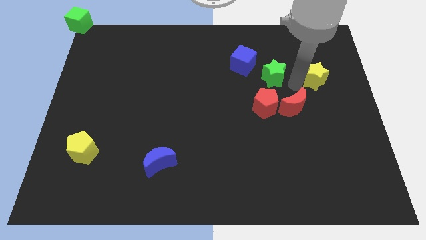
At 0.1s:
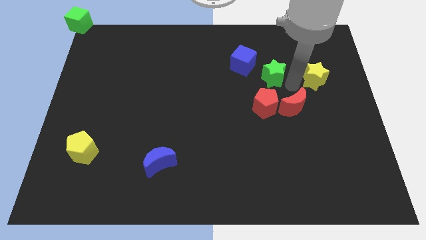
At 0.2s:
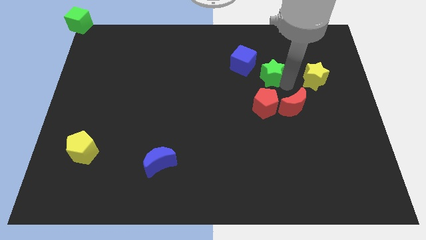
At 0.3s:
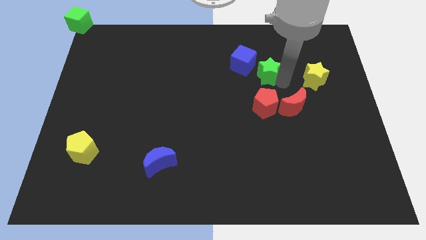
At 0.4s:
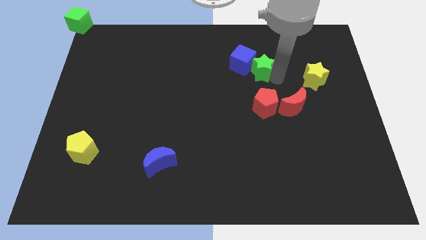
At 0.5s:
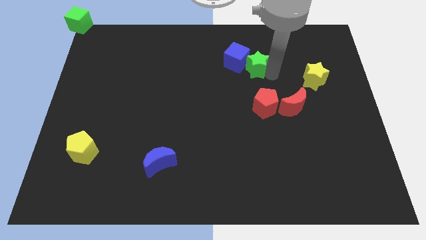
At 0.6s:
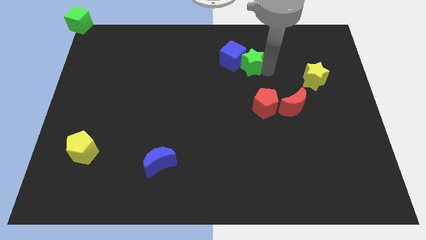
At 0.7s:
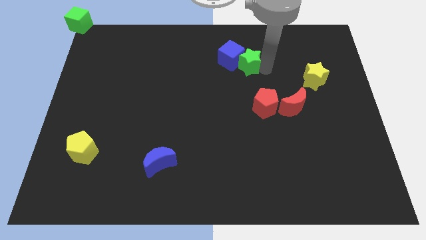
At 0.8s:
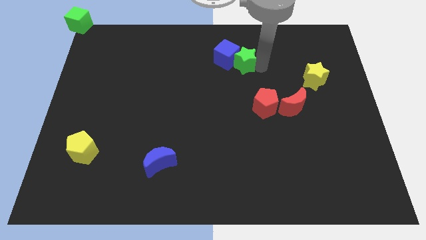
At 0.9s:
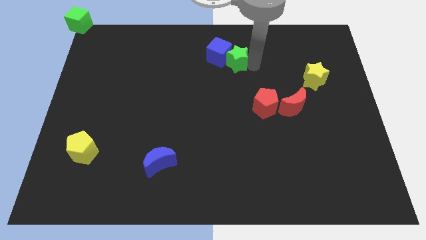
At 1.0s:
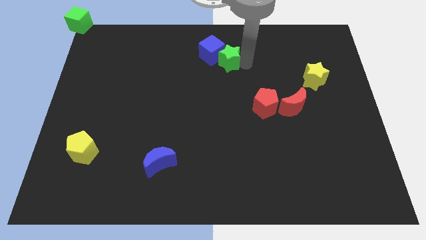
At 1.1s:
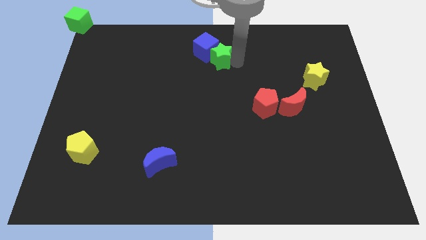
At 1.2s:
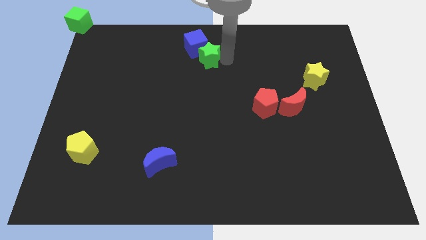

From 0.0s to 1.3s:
push the green star into the blue cube

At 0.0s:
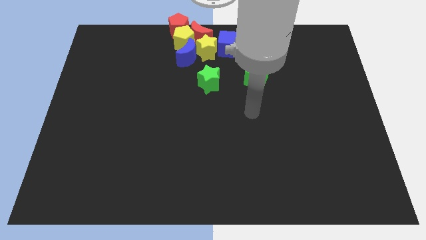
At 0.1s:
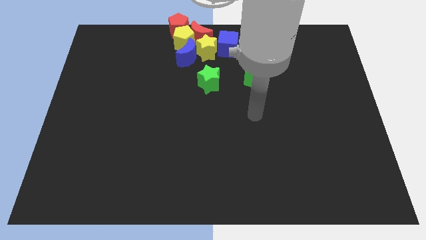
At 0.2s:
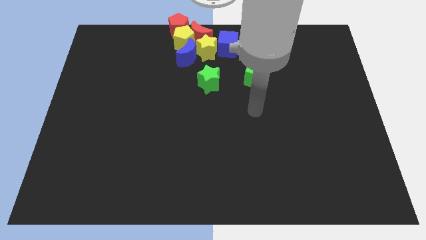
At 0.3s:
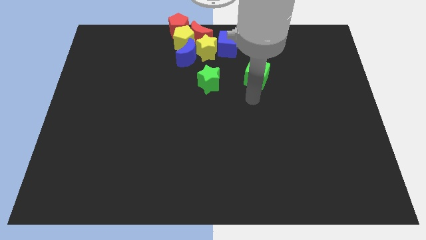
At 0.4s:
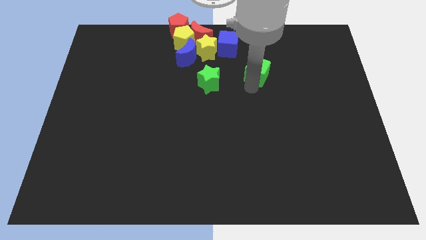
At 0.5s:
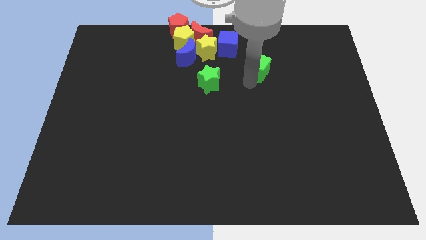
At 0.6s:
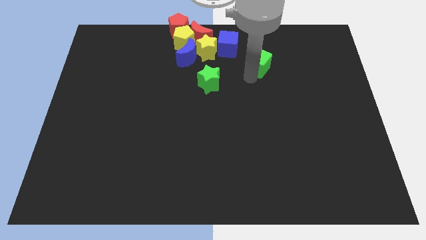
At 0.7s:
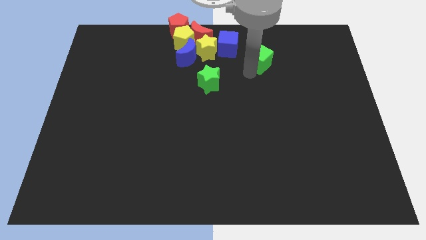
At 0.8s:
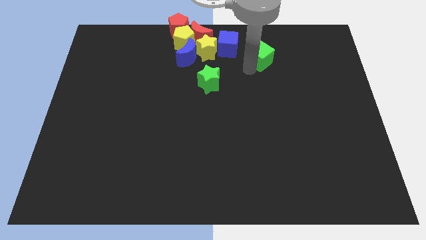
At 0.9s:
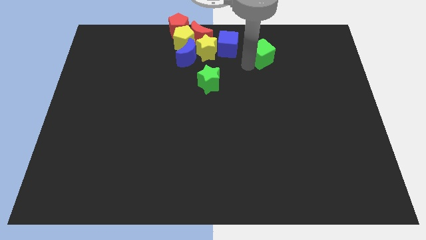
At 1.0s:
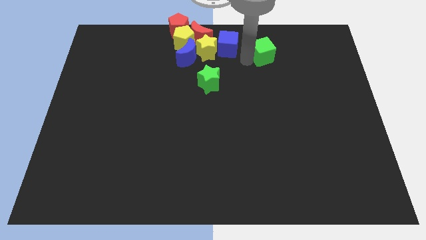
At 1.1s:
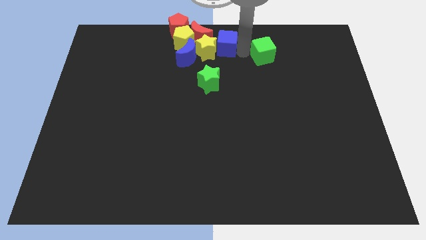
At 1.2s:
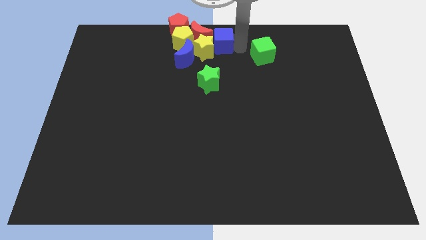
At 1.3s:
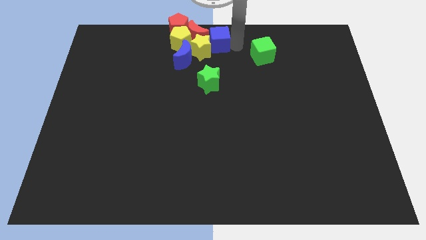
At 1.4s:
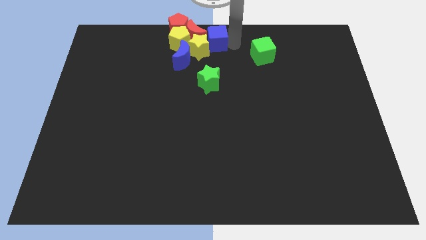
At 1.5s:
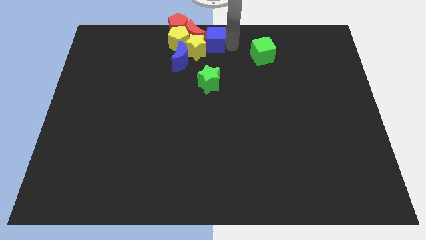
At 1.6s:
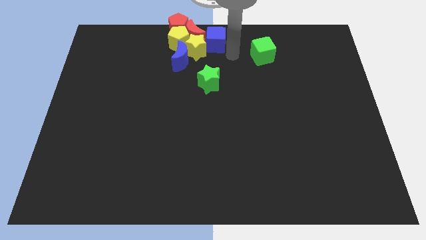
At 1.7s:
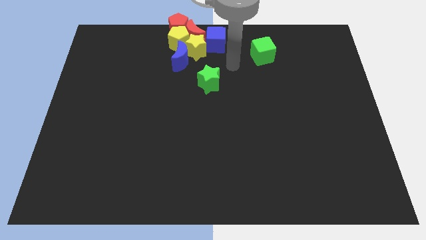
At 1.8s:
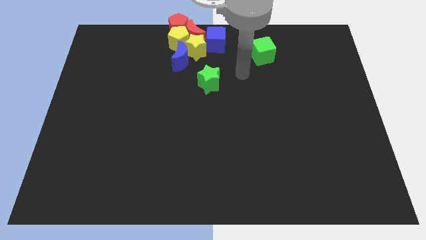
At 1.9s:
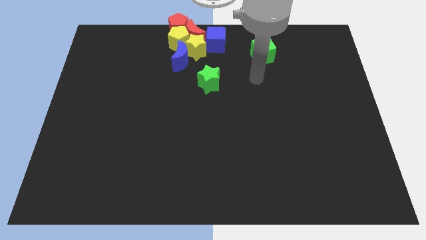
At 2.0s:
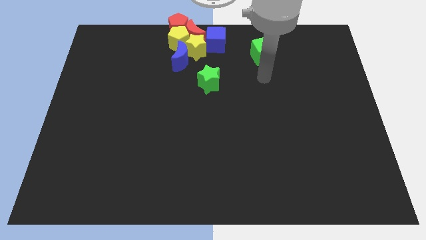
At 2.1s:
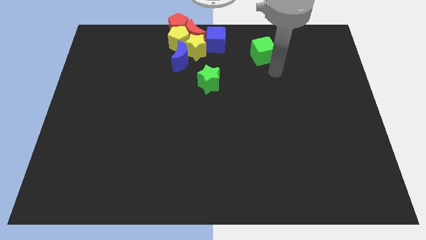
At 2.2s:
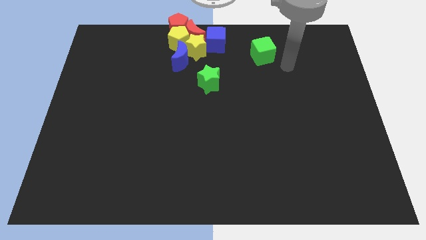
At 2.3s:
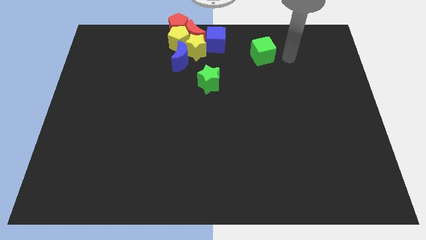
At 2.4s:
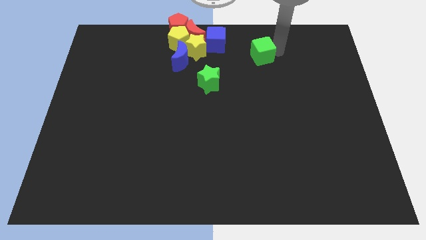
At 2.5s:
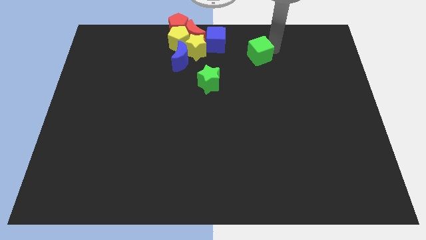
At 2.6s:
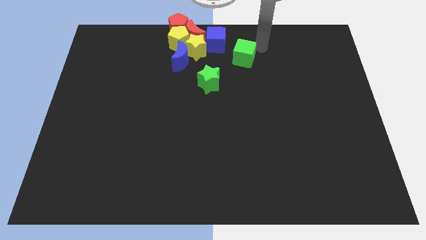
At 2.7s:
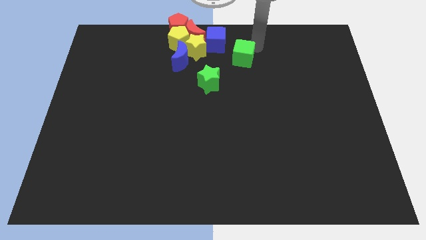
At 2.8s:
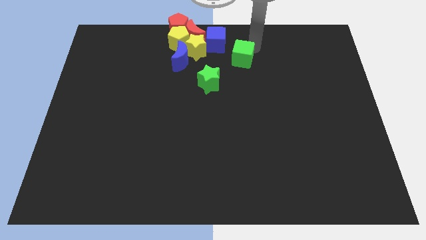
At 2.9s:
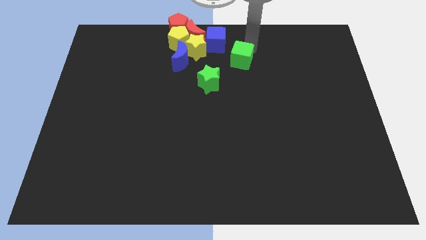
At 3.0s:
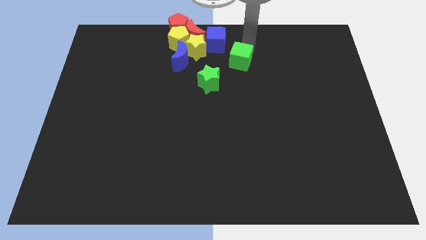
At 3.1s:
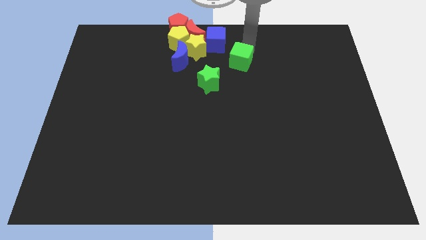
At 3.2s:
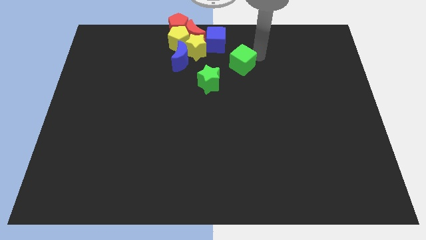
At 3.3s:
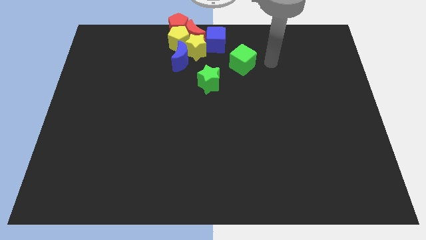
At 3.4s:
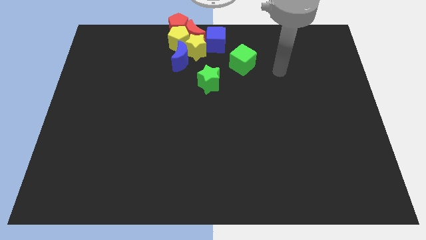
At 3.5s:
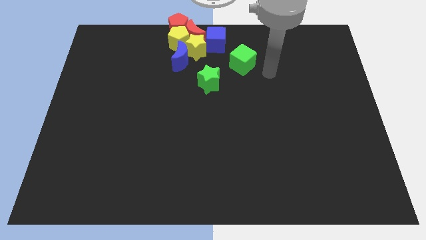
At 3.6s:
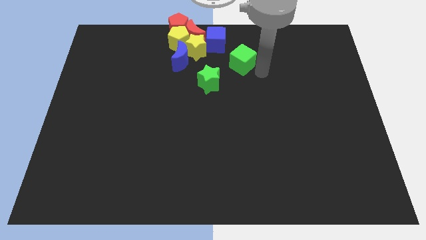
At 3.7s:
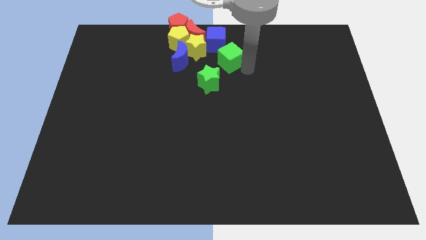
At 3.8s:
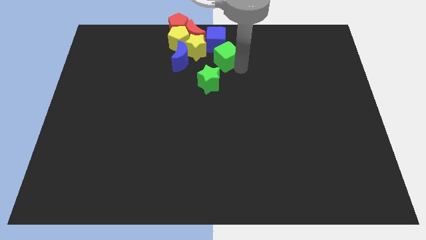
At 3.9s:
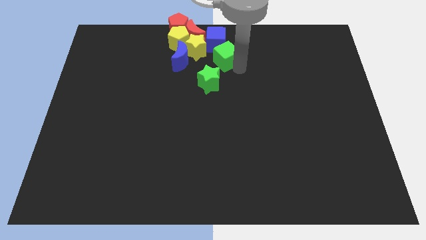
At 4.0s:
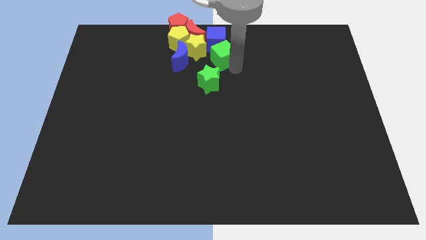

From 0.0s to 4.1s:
move the green cube to the bottom side of the blue cube

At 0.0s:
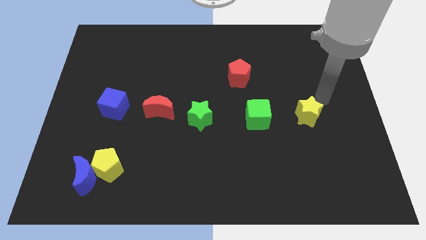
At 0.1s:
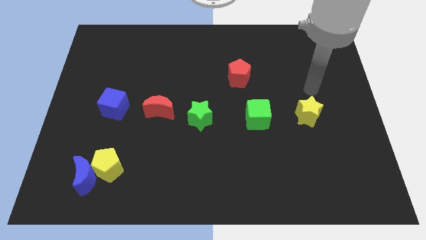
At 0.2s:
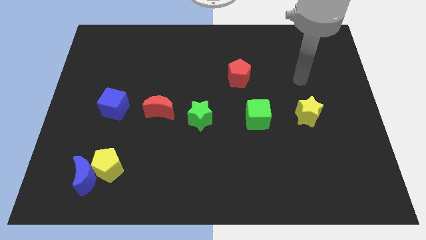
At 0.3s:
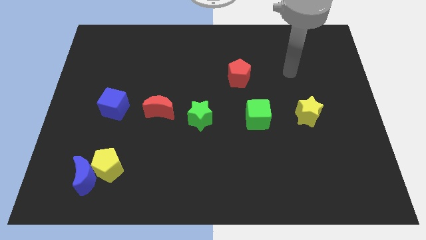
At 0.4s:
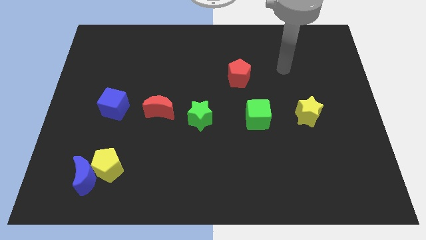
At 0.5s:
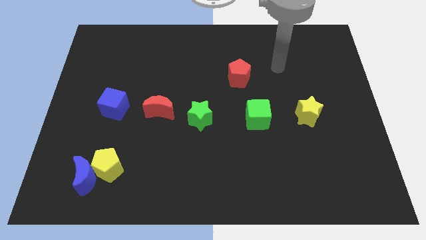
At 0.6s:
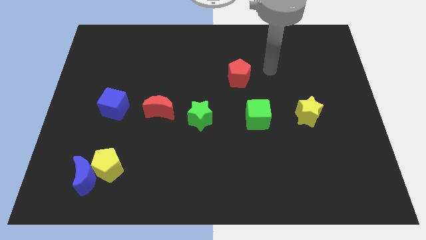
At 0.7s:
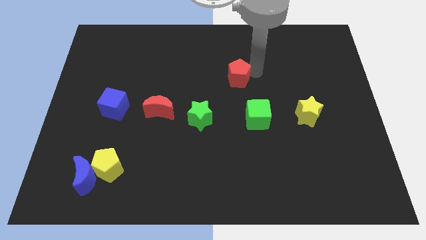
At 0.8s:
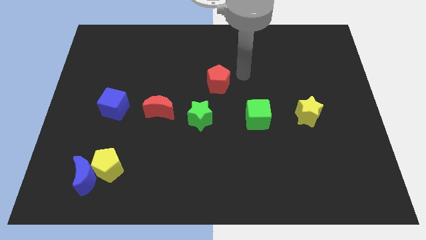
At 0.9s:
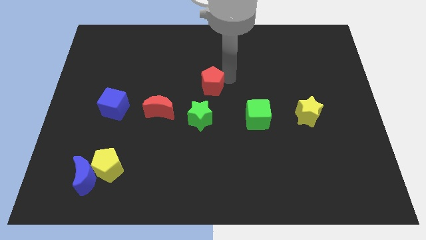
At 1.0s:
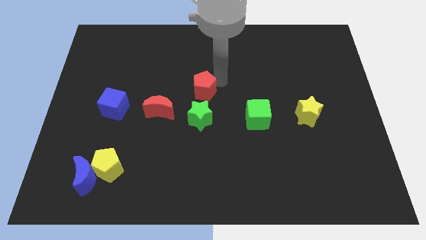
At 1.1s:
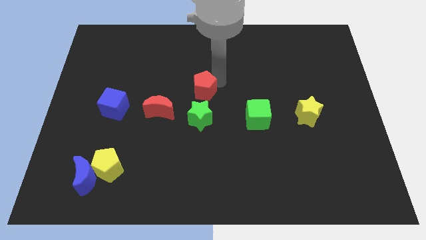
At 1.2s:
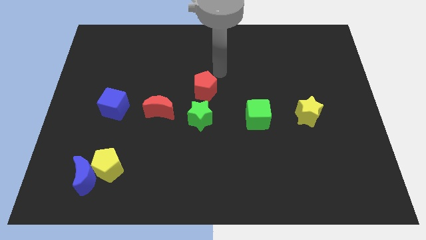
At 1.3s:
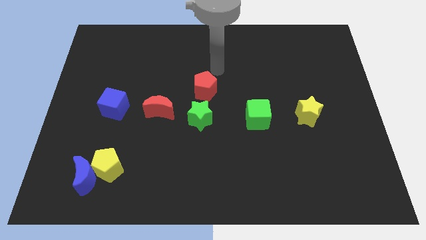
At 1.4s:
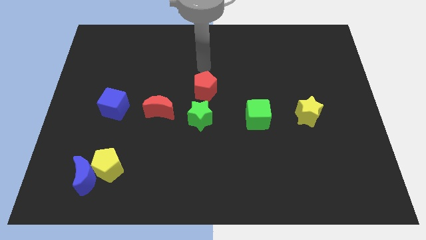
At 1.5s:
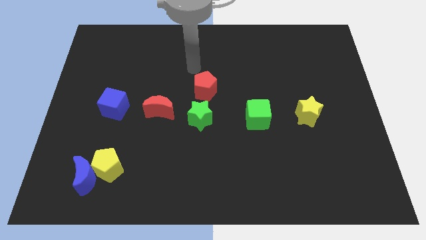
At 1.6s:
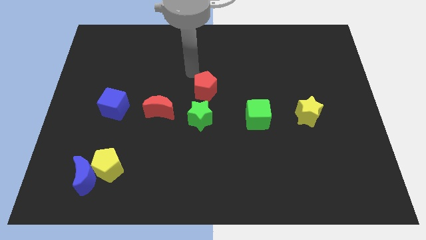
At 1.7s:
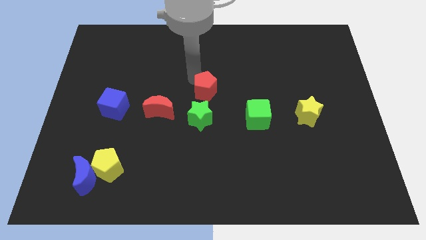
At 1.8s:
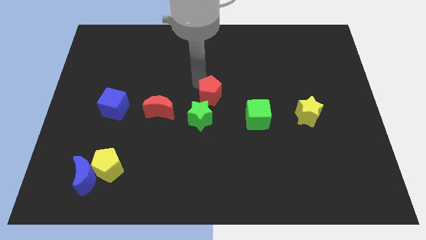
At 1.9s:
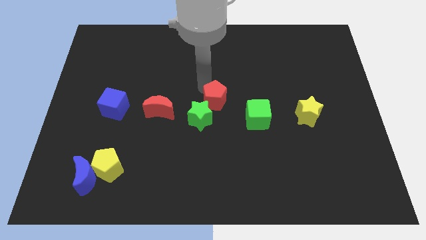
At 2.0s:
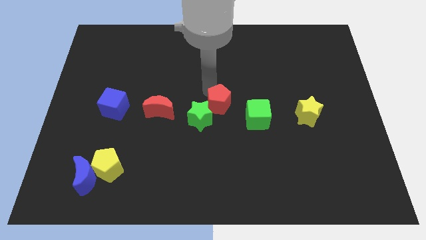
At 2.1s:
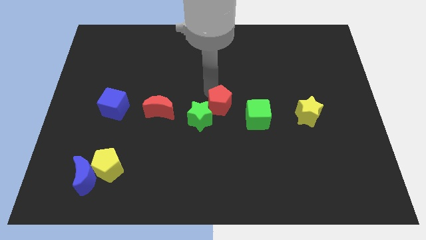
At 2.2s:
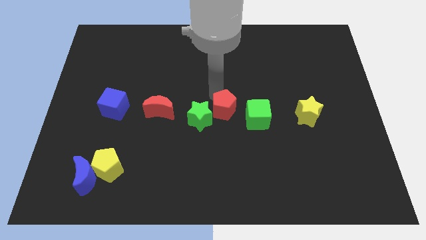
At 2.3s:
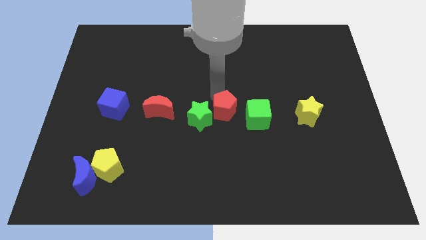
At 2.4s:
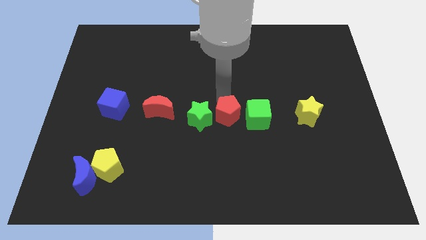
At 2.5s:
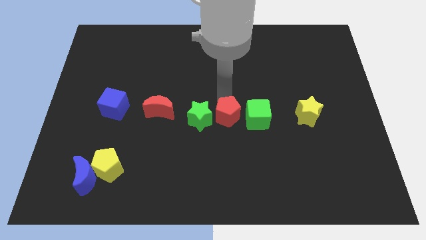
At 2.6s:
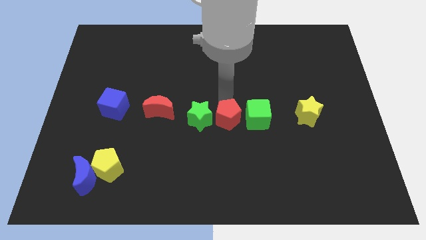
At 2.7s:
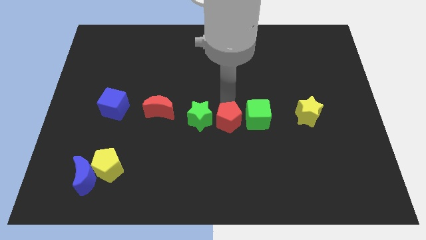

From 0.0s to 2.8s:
move the red pentagon to the right of the green star

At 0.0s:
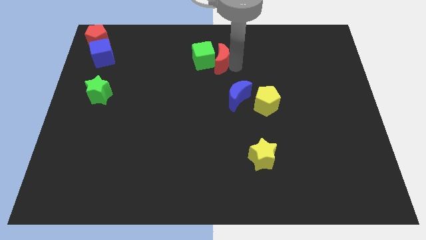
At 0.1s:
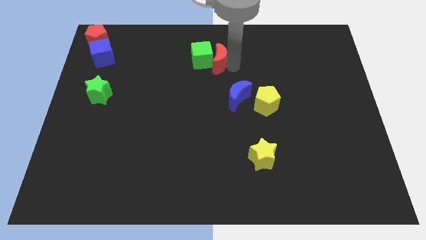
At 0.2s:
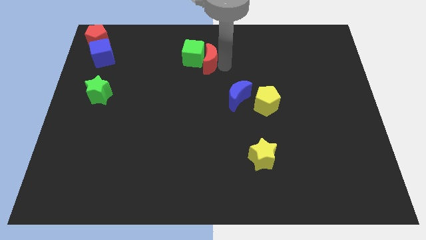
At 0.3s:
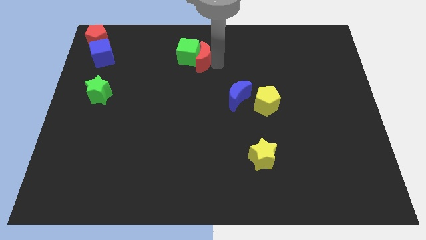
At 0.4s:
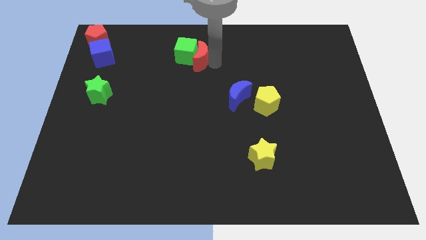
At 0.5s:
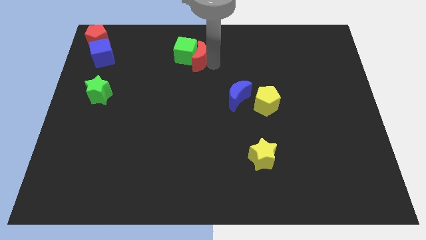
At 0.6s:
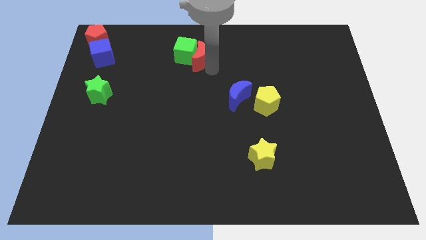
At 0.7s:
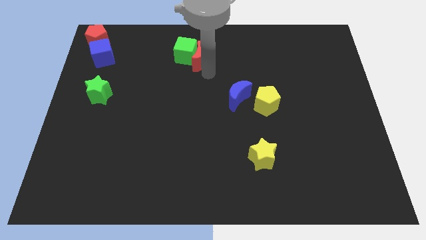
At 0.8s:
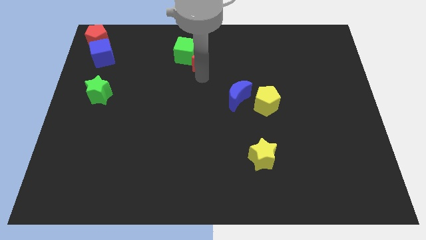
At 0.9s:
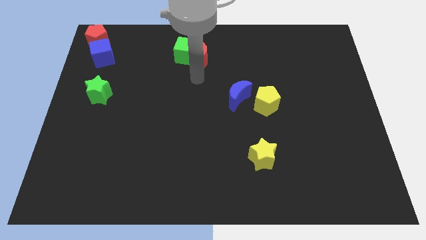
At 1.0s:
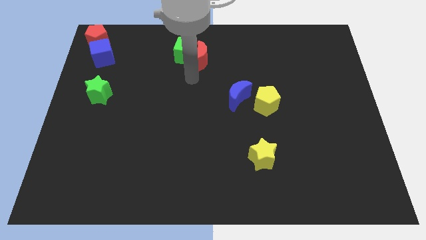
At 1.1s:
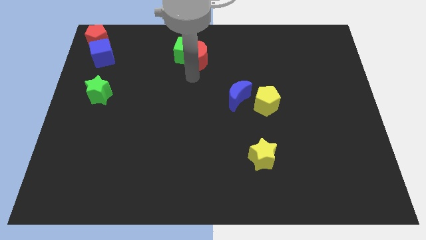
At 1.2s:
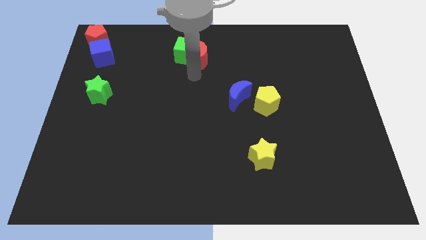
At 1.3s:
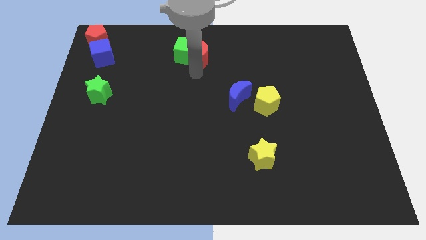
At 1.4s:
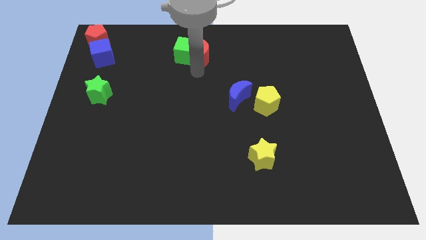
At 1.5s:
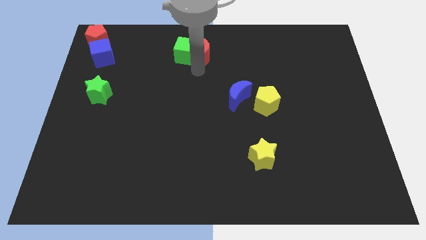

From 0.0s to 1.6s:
push the green cube along with the red crescent to the top center of the board
